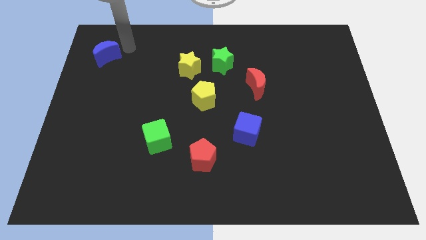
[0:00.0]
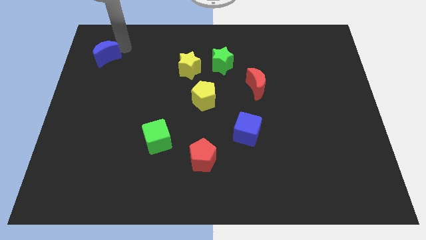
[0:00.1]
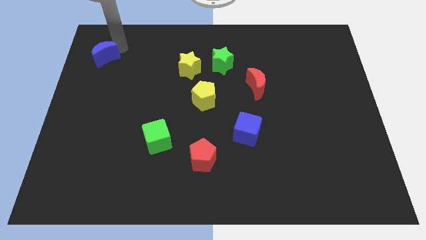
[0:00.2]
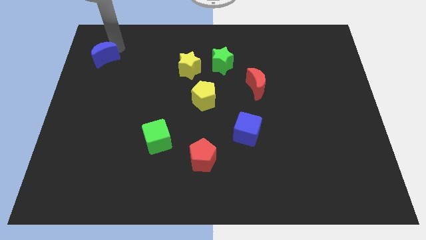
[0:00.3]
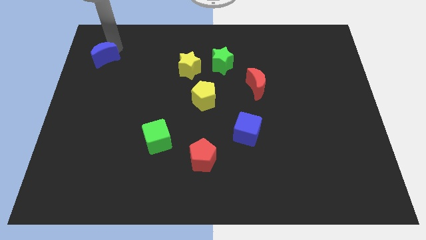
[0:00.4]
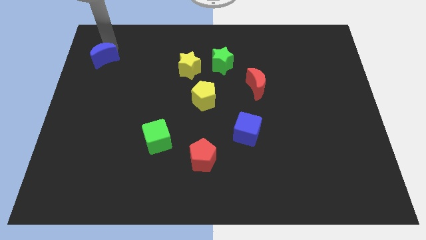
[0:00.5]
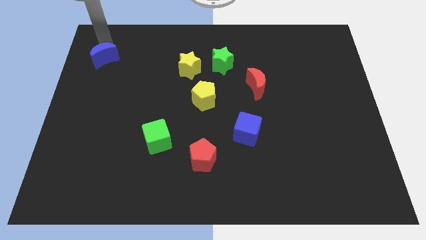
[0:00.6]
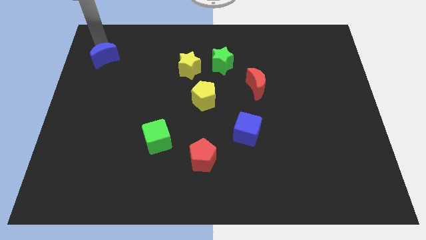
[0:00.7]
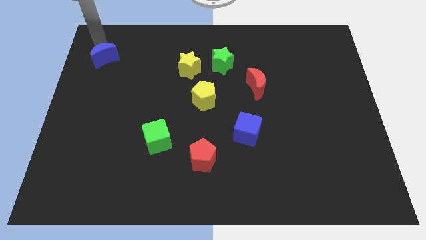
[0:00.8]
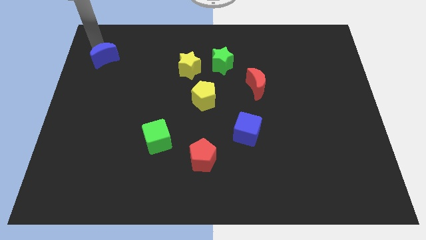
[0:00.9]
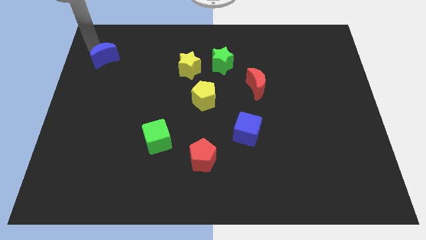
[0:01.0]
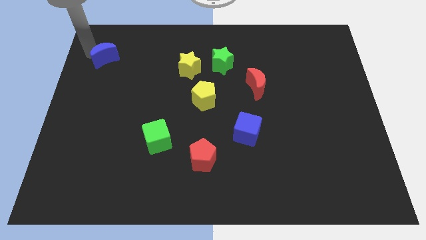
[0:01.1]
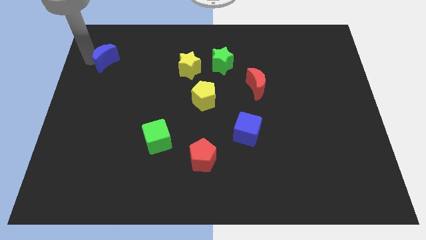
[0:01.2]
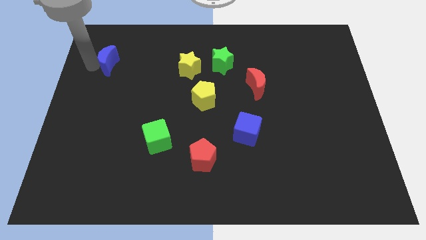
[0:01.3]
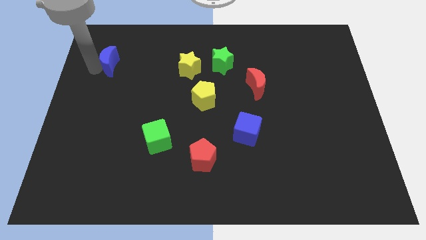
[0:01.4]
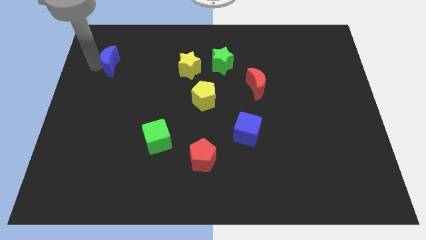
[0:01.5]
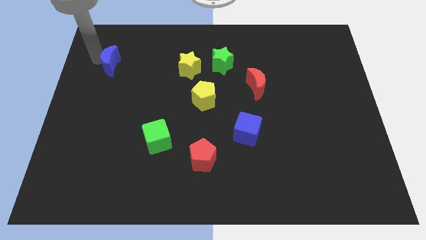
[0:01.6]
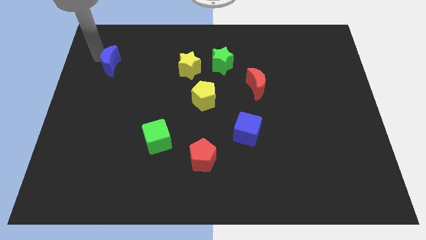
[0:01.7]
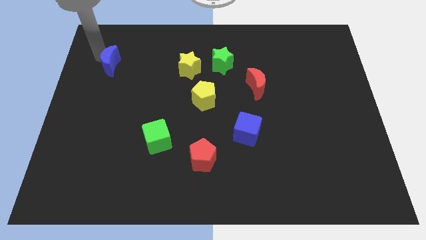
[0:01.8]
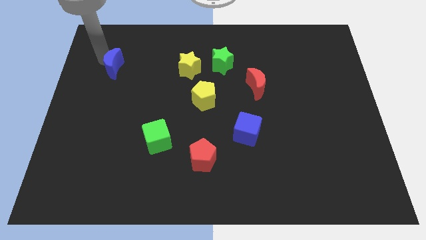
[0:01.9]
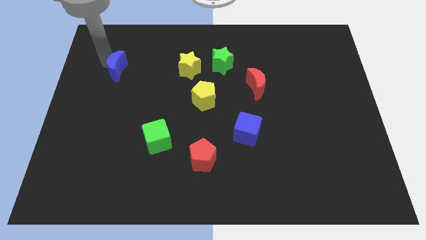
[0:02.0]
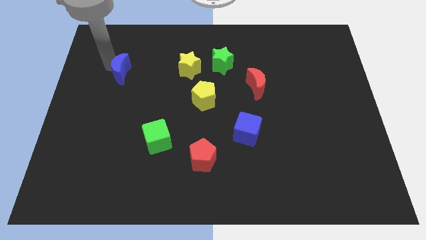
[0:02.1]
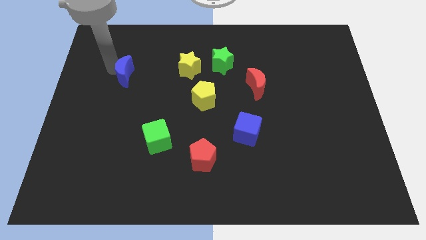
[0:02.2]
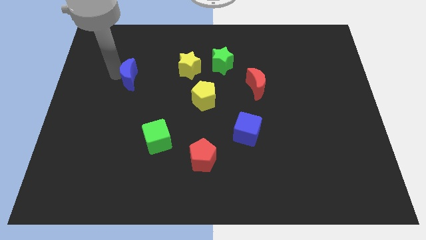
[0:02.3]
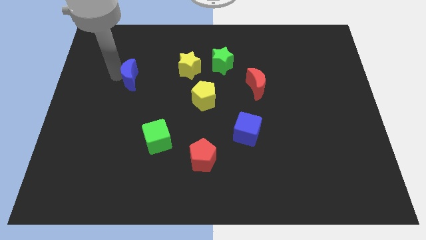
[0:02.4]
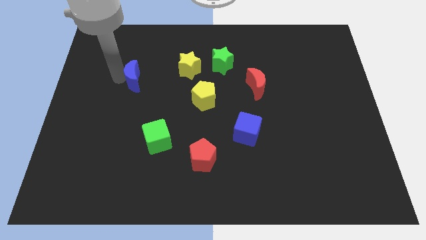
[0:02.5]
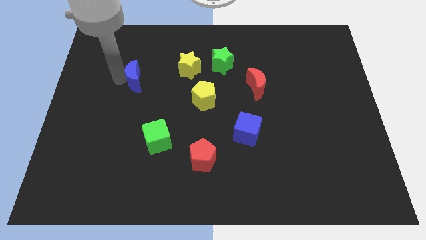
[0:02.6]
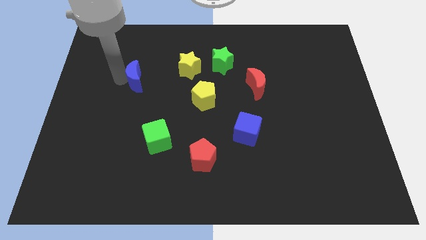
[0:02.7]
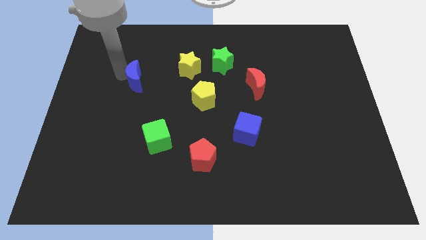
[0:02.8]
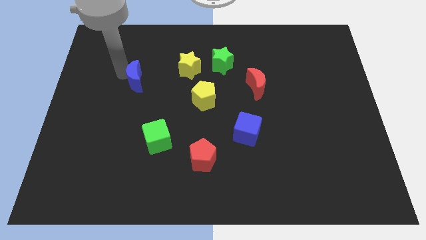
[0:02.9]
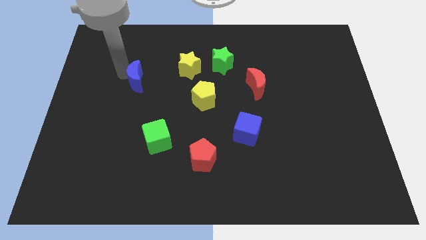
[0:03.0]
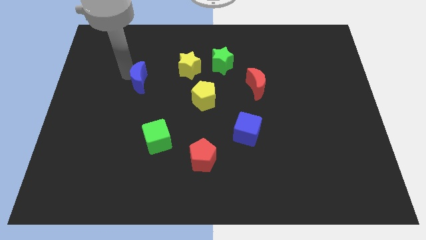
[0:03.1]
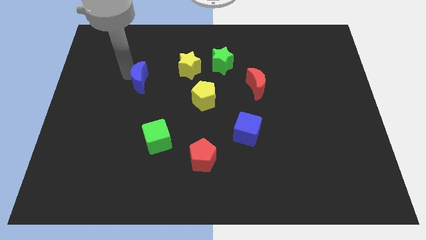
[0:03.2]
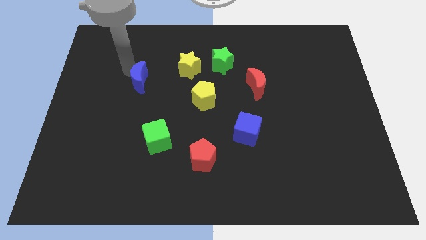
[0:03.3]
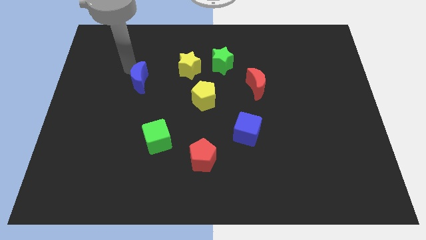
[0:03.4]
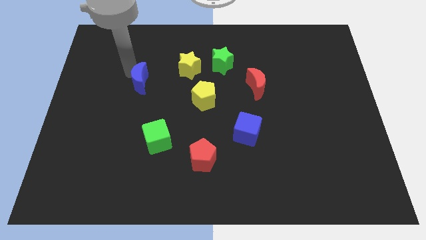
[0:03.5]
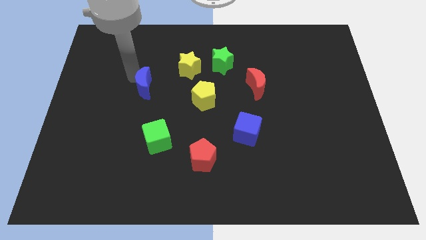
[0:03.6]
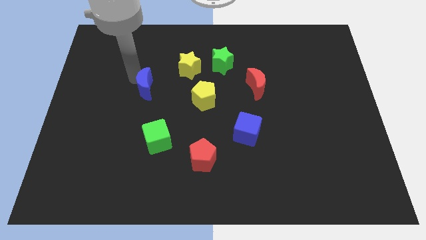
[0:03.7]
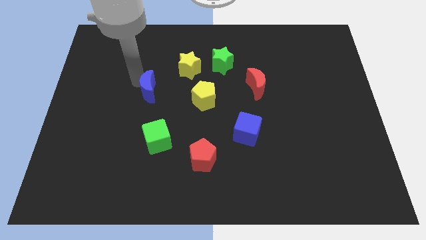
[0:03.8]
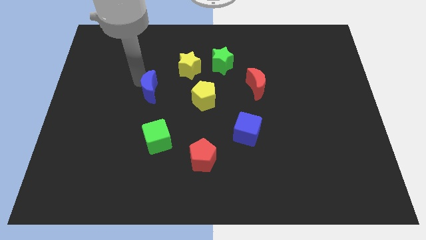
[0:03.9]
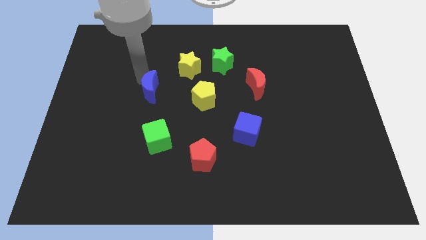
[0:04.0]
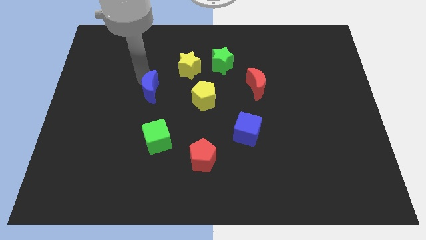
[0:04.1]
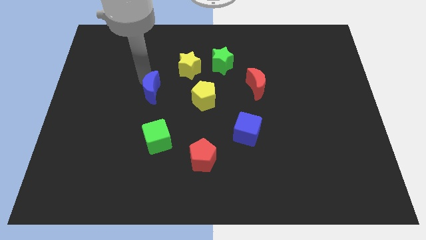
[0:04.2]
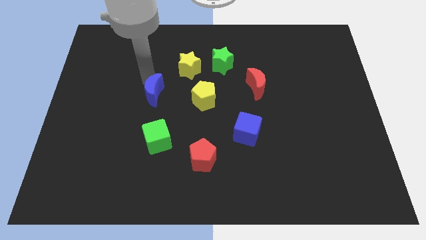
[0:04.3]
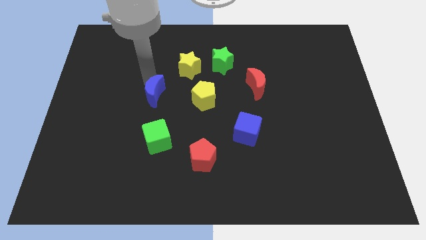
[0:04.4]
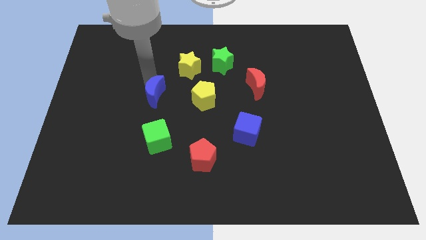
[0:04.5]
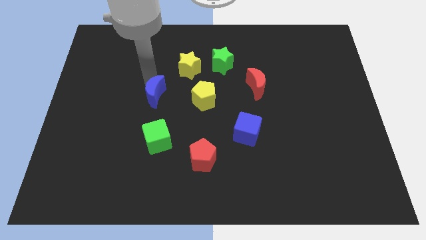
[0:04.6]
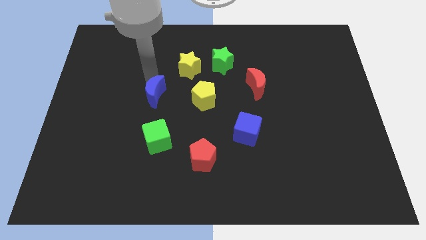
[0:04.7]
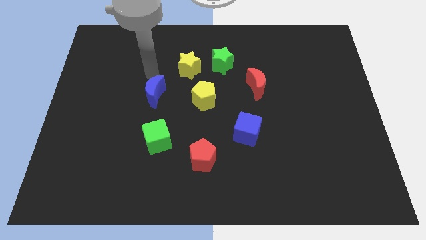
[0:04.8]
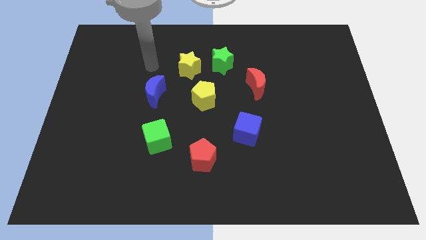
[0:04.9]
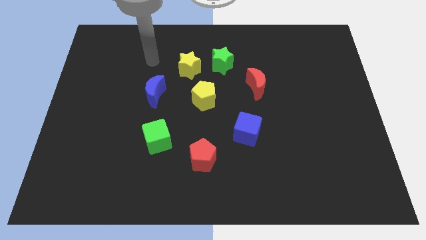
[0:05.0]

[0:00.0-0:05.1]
push the blue crescent to the top of green cube

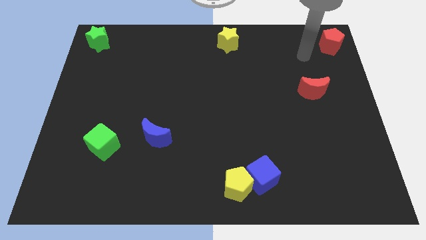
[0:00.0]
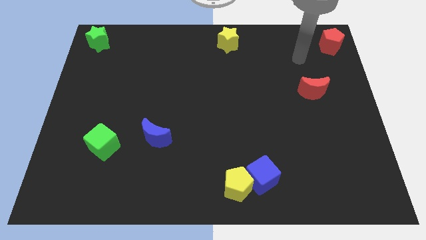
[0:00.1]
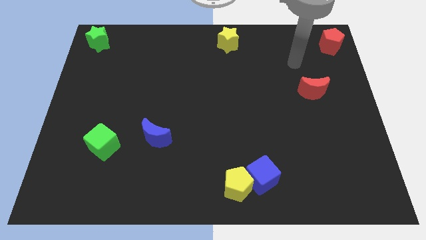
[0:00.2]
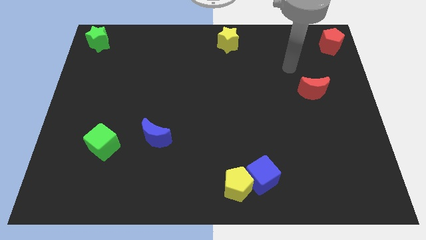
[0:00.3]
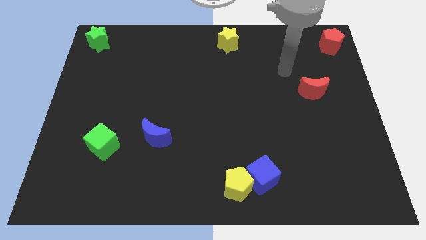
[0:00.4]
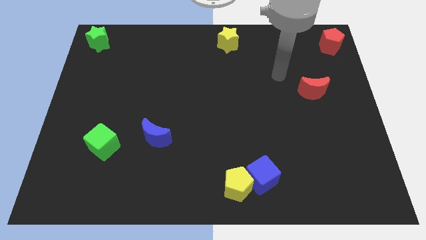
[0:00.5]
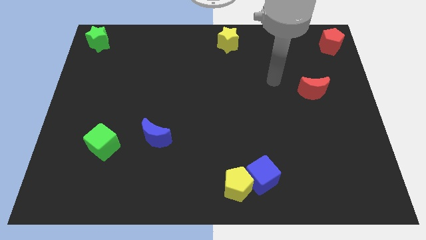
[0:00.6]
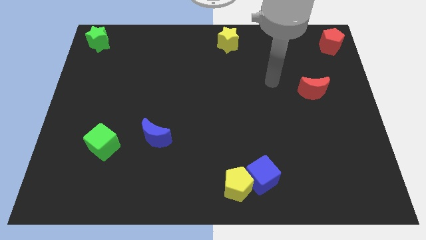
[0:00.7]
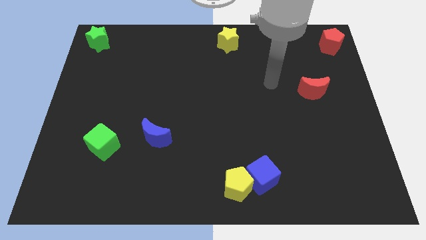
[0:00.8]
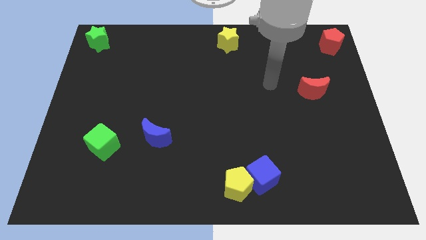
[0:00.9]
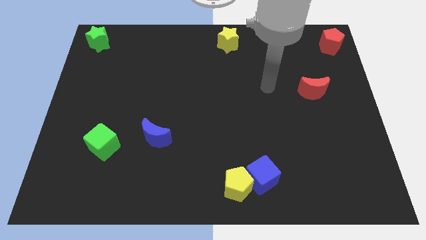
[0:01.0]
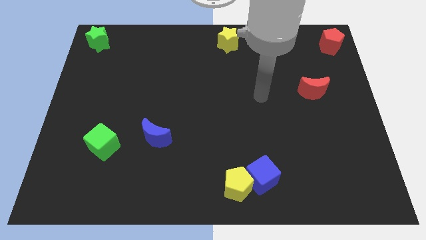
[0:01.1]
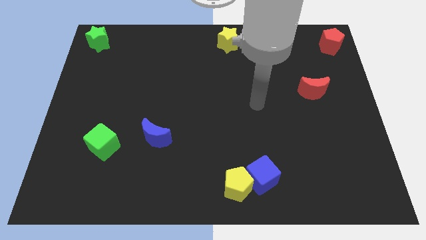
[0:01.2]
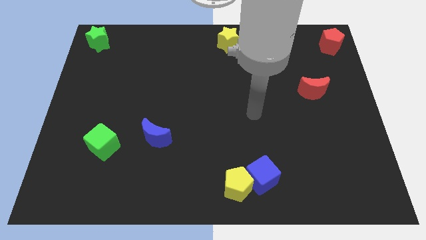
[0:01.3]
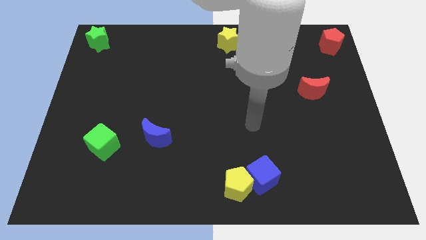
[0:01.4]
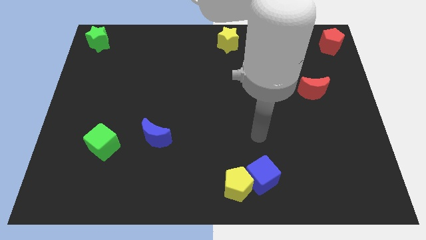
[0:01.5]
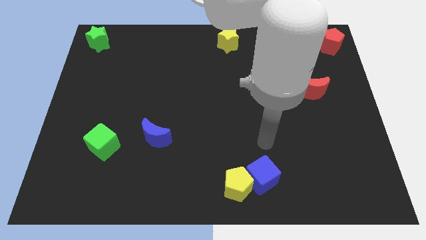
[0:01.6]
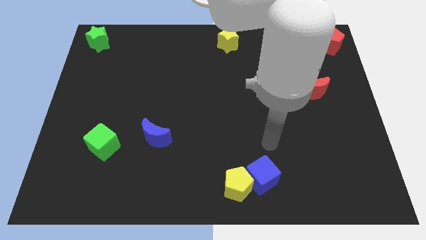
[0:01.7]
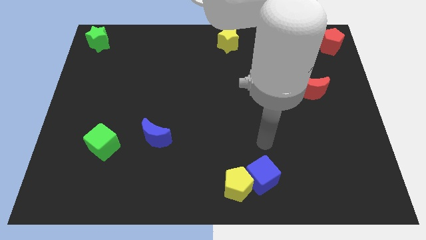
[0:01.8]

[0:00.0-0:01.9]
point your hand at the top side of the blue cube

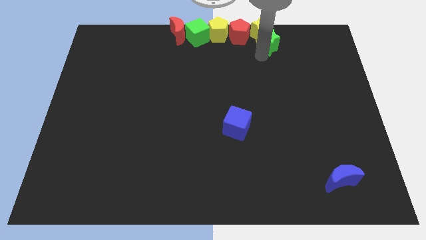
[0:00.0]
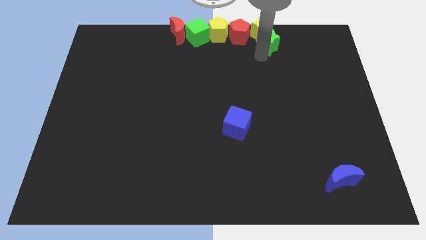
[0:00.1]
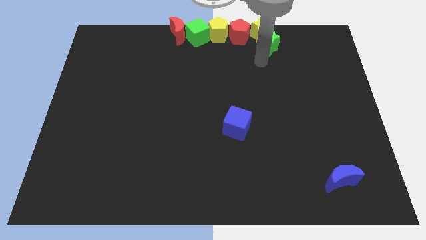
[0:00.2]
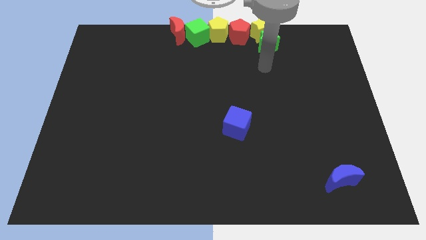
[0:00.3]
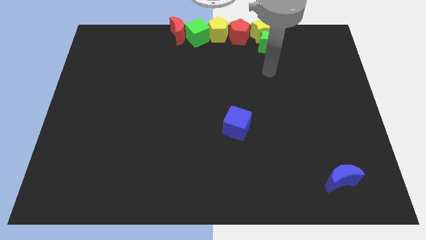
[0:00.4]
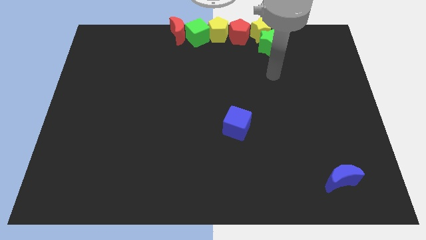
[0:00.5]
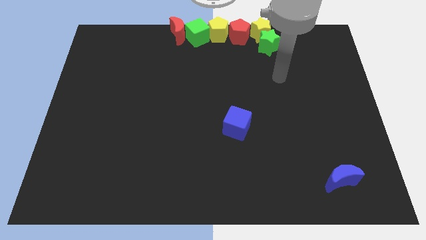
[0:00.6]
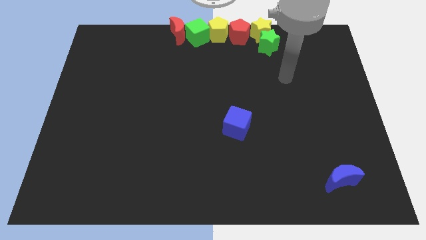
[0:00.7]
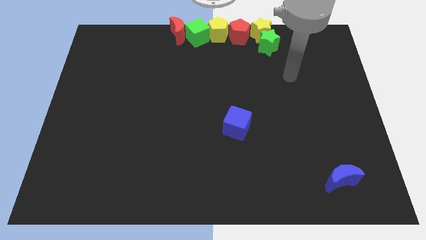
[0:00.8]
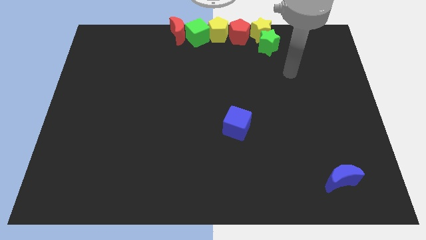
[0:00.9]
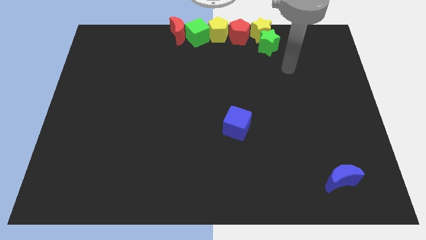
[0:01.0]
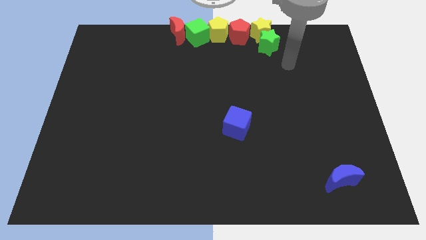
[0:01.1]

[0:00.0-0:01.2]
move your arm away from the green star

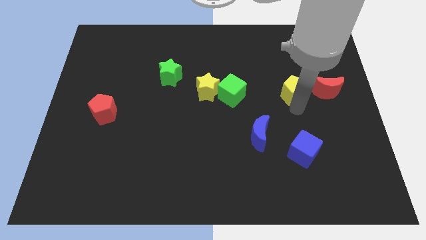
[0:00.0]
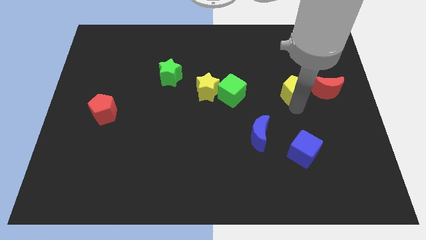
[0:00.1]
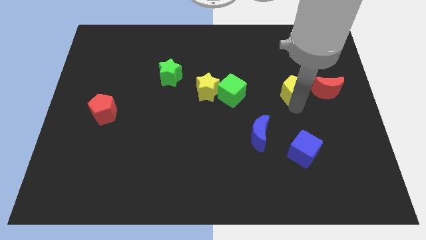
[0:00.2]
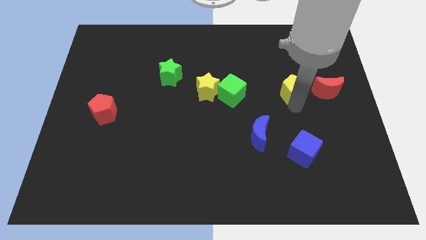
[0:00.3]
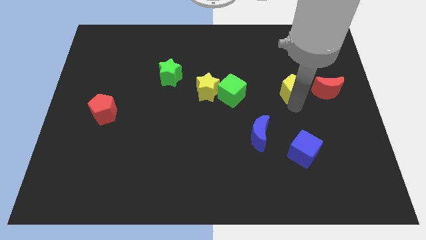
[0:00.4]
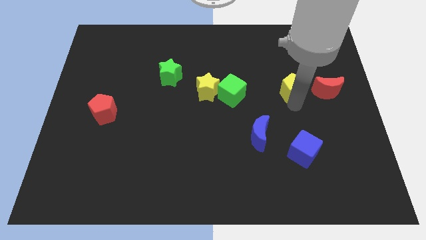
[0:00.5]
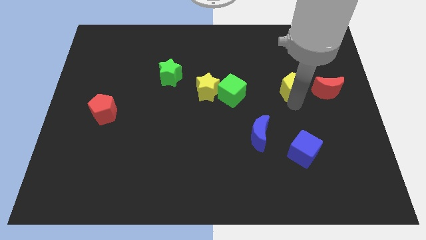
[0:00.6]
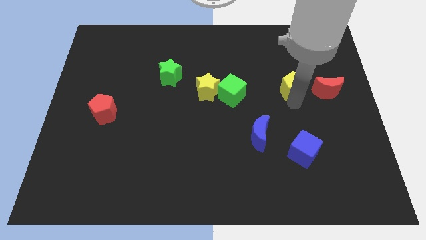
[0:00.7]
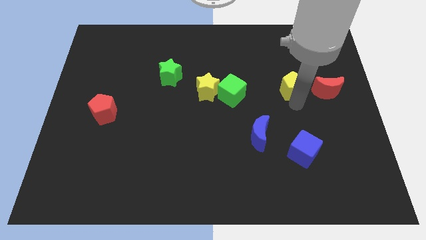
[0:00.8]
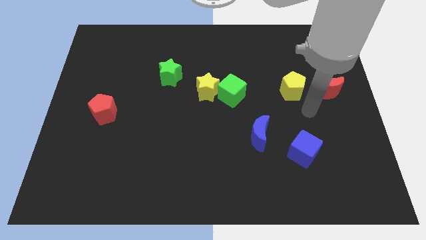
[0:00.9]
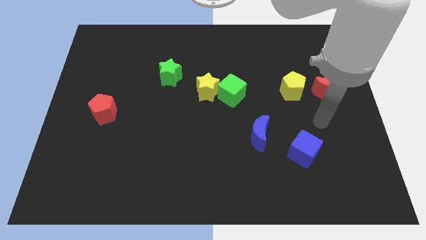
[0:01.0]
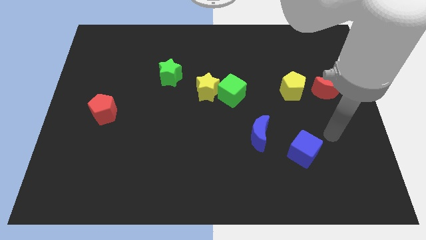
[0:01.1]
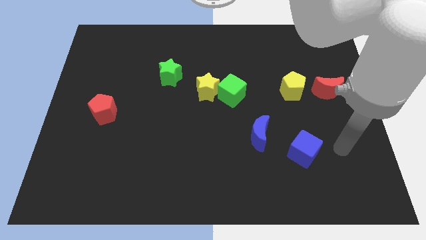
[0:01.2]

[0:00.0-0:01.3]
place the yellow pentagon to the left side of the red crescent
